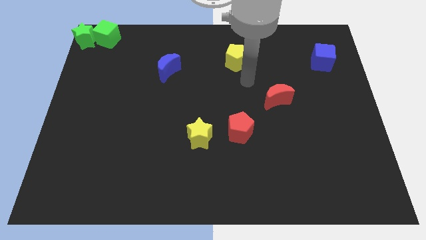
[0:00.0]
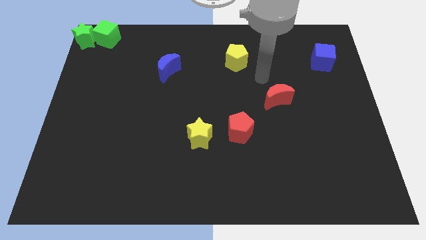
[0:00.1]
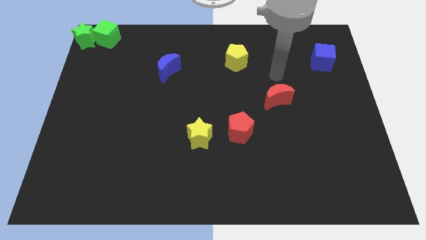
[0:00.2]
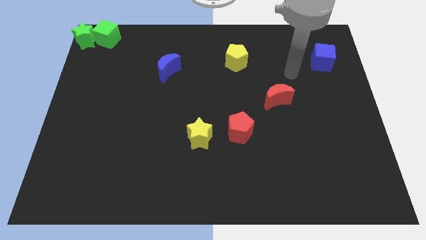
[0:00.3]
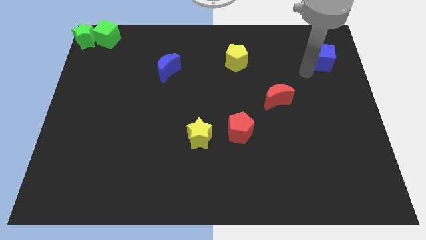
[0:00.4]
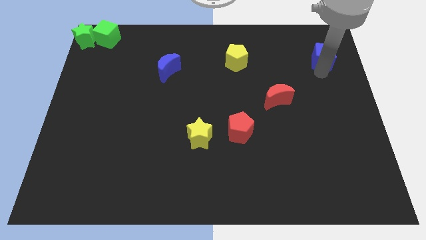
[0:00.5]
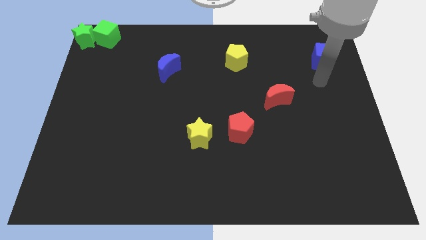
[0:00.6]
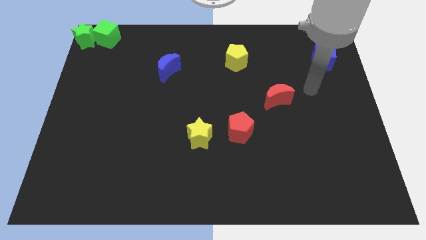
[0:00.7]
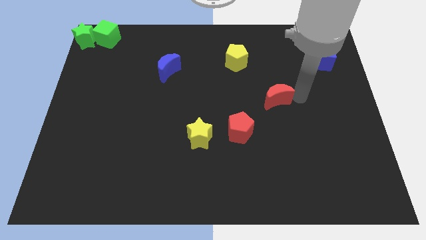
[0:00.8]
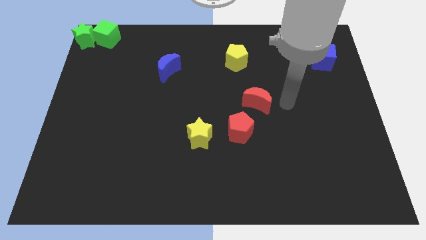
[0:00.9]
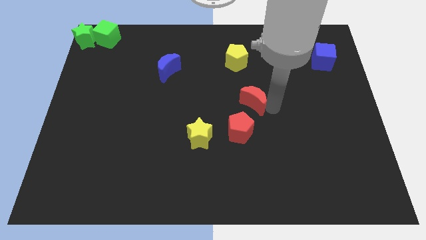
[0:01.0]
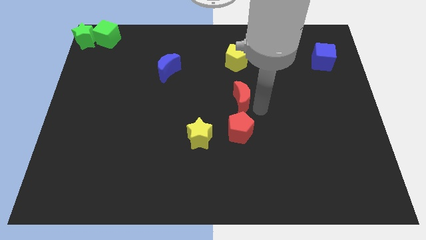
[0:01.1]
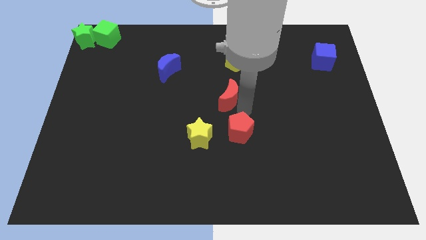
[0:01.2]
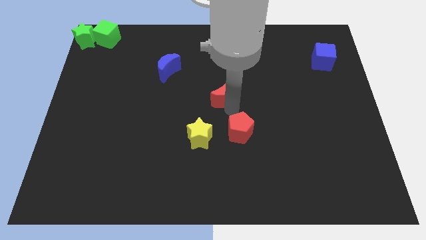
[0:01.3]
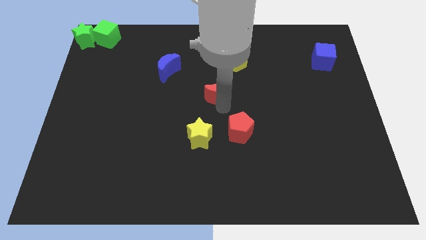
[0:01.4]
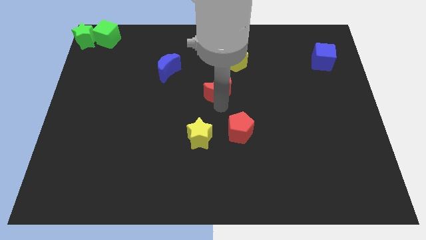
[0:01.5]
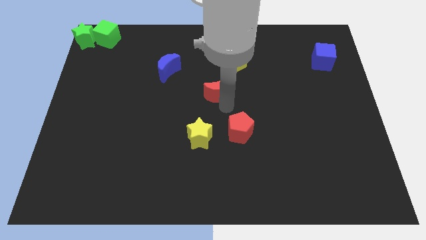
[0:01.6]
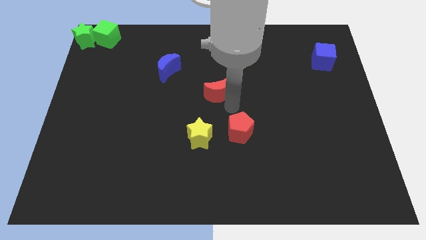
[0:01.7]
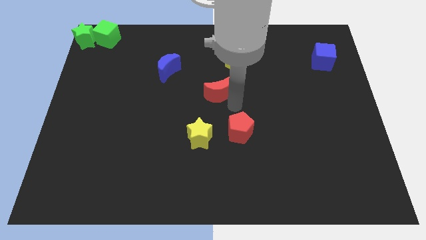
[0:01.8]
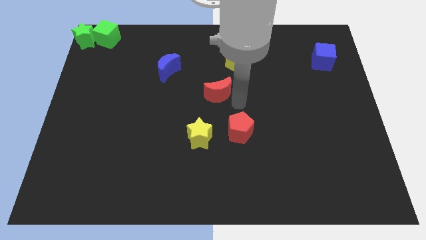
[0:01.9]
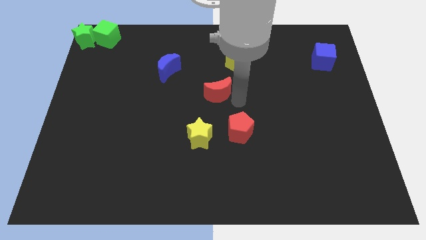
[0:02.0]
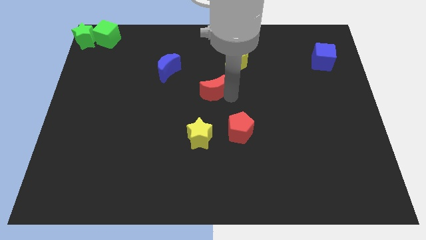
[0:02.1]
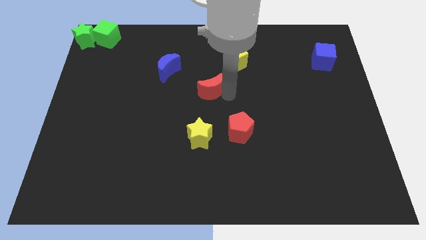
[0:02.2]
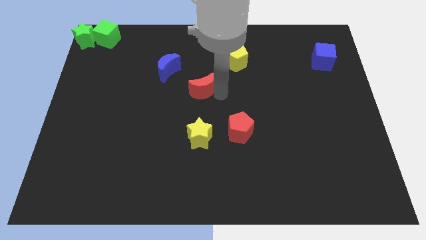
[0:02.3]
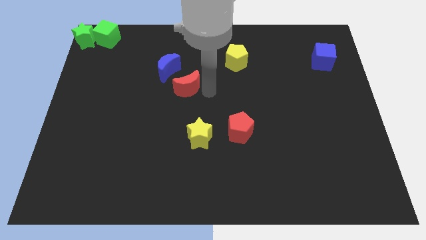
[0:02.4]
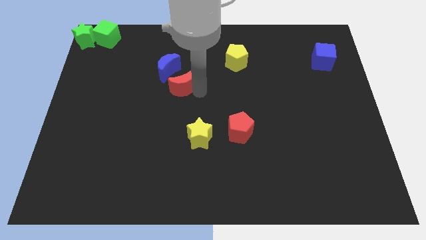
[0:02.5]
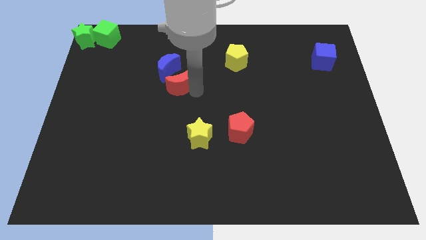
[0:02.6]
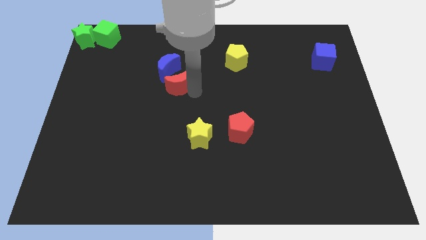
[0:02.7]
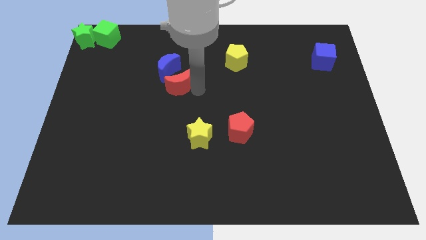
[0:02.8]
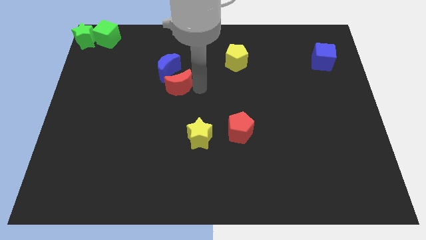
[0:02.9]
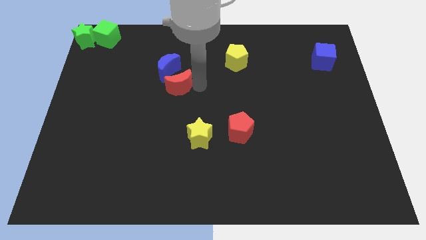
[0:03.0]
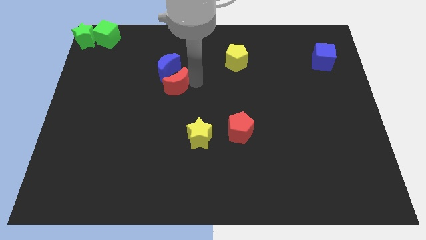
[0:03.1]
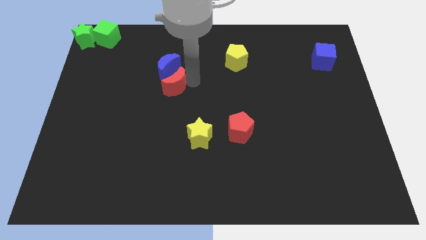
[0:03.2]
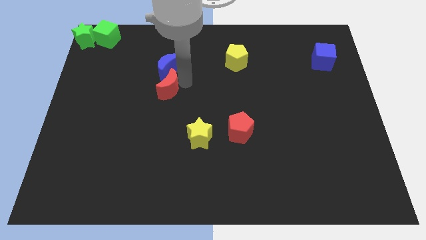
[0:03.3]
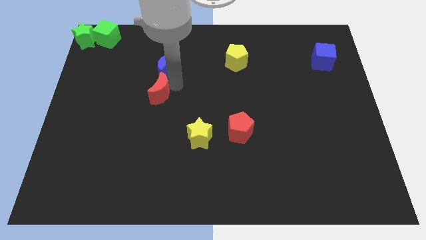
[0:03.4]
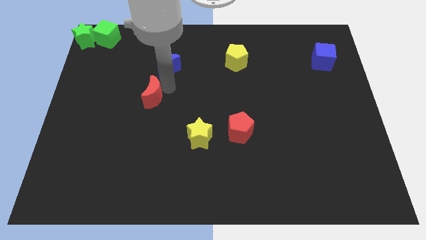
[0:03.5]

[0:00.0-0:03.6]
place red moon to the bottom of blue moon

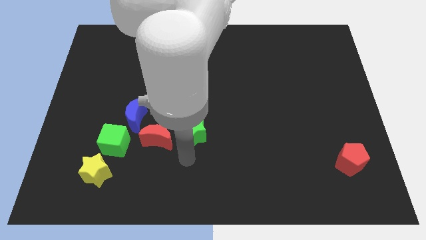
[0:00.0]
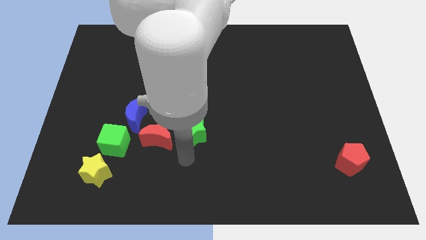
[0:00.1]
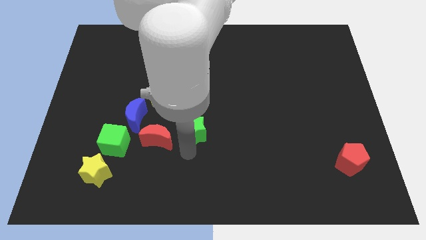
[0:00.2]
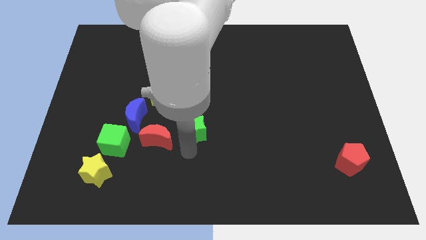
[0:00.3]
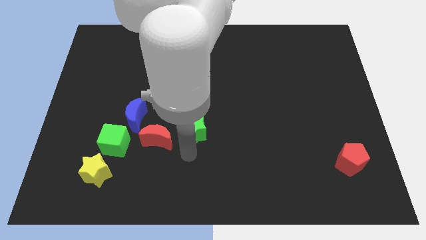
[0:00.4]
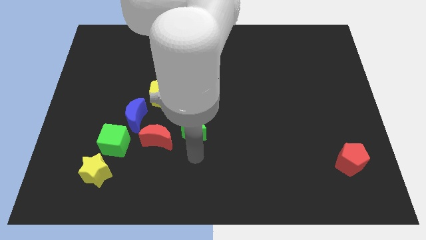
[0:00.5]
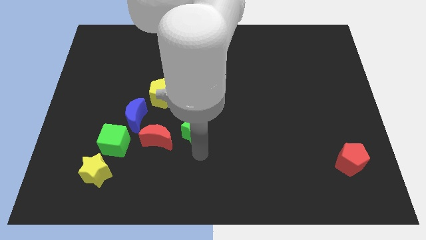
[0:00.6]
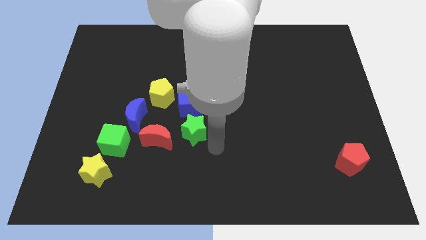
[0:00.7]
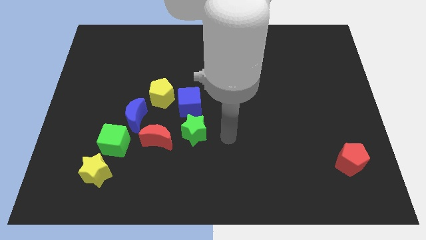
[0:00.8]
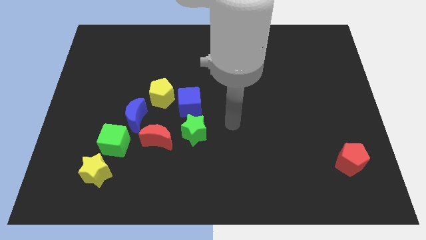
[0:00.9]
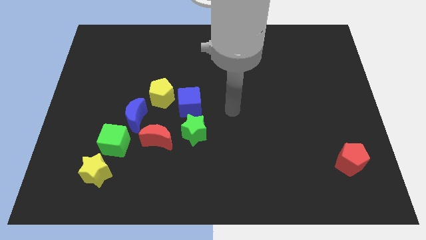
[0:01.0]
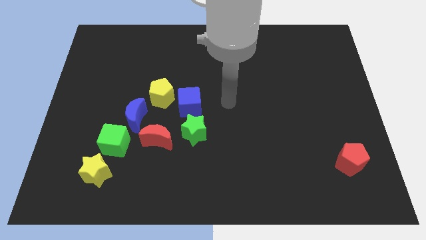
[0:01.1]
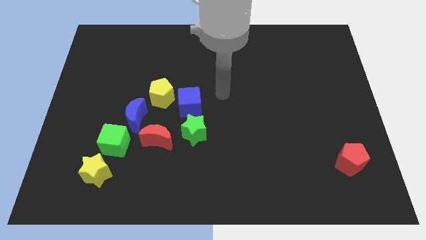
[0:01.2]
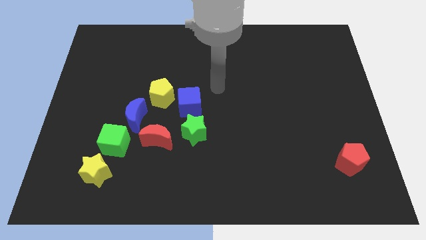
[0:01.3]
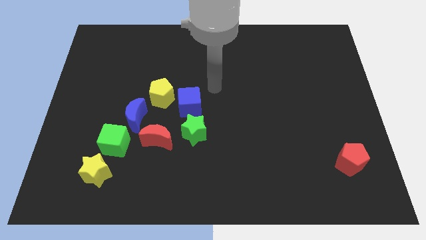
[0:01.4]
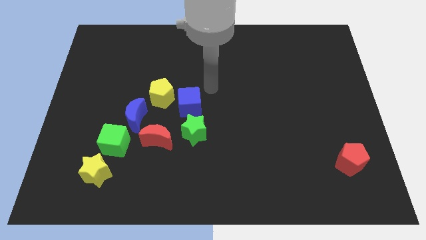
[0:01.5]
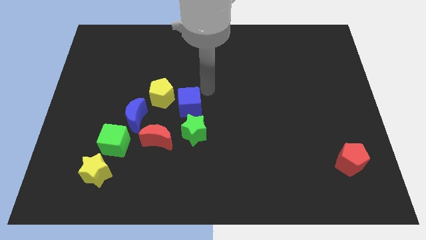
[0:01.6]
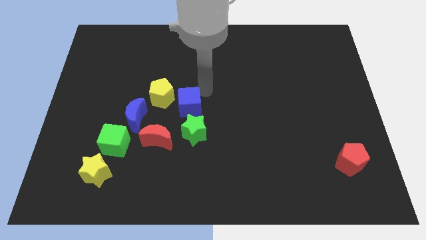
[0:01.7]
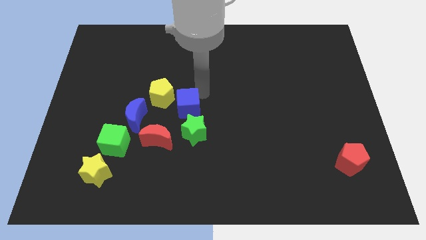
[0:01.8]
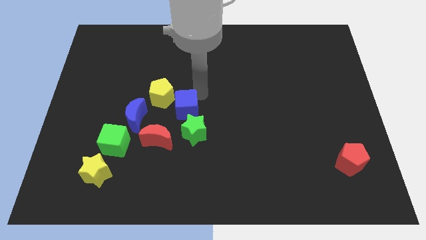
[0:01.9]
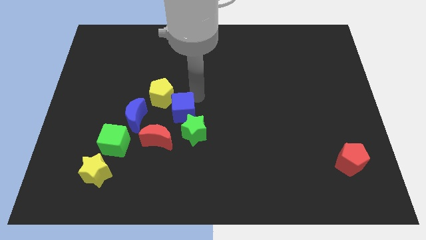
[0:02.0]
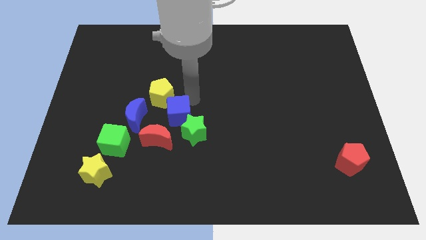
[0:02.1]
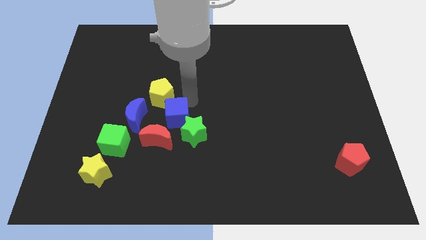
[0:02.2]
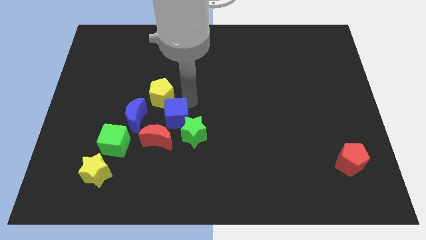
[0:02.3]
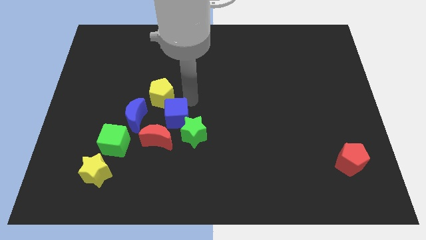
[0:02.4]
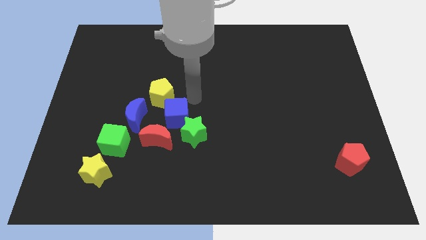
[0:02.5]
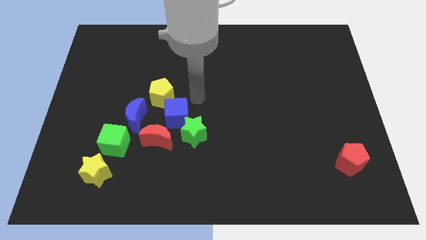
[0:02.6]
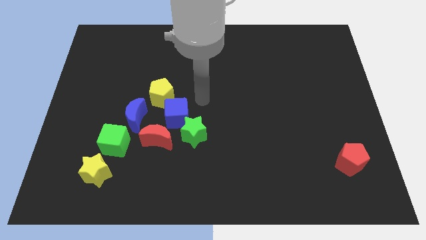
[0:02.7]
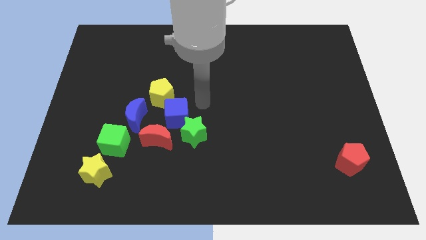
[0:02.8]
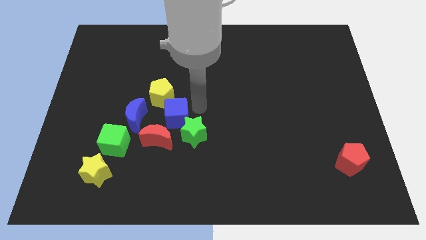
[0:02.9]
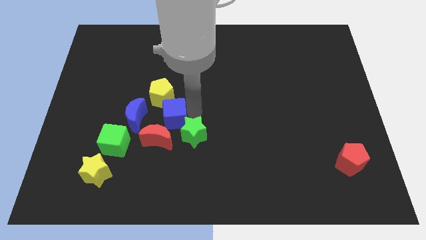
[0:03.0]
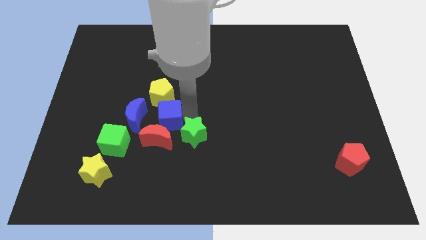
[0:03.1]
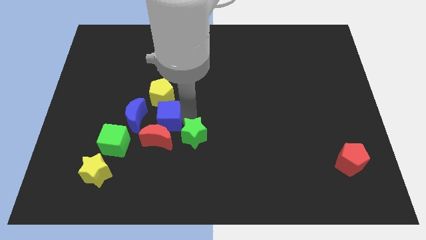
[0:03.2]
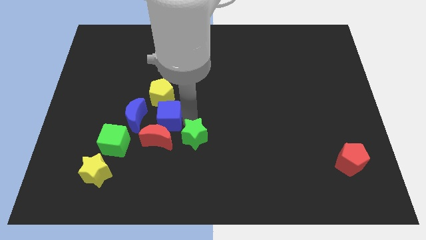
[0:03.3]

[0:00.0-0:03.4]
move the blue cube into the group of blocks

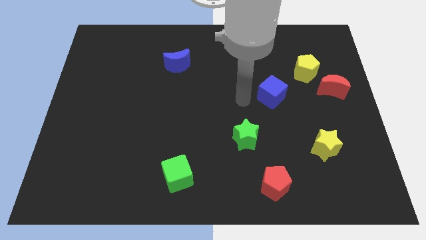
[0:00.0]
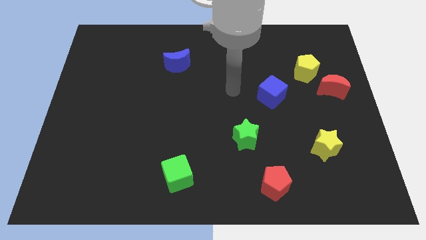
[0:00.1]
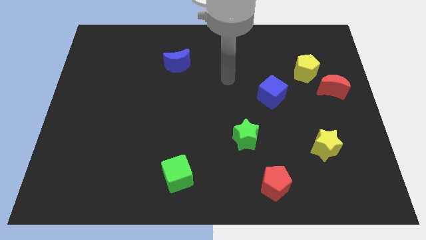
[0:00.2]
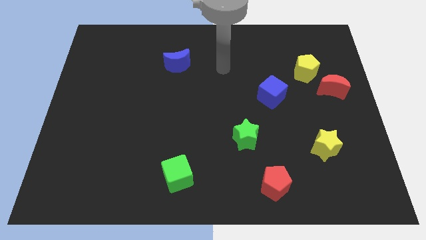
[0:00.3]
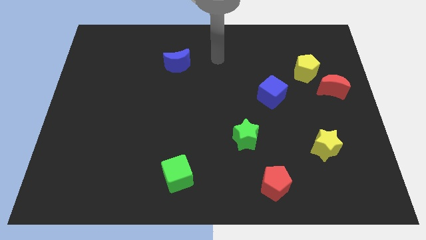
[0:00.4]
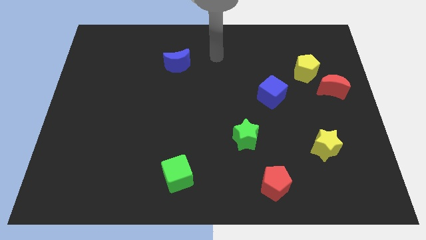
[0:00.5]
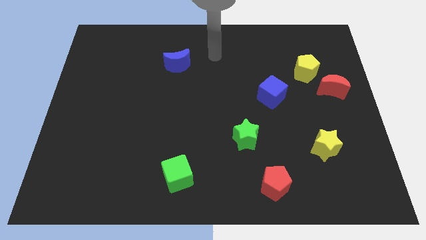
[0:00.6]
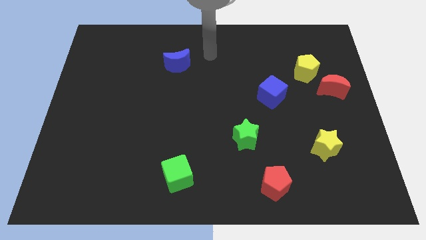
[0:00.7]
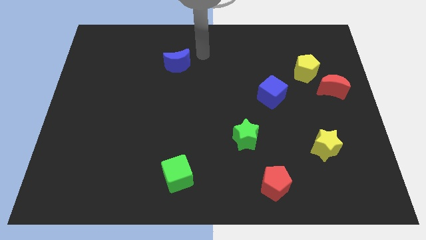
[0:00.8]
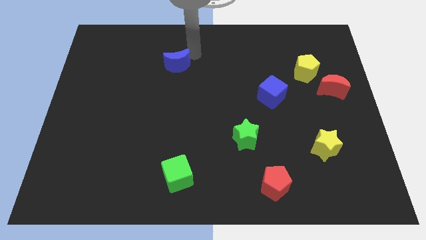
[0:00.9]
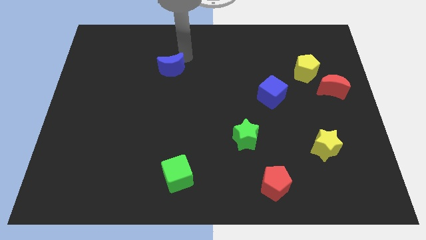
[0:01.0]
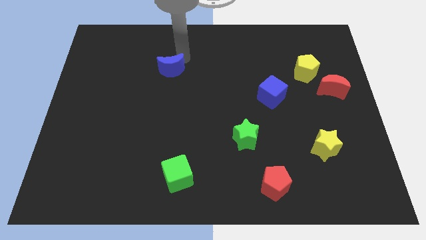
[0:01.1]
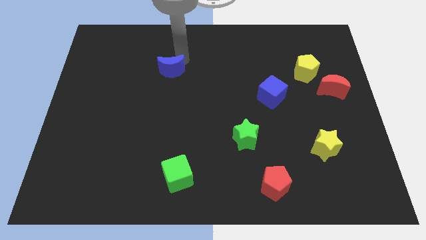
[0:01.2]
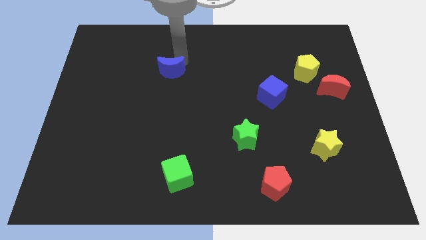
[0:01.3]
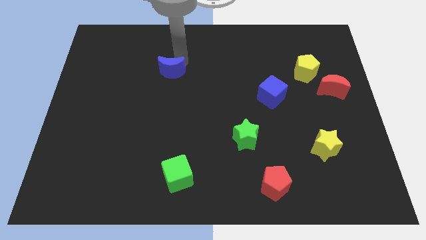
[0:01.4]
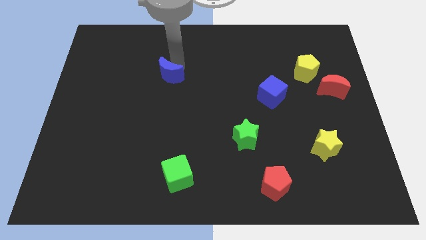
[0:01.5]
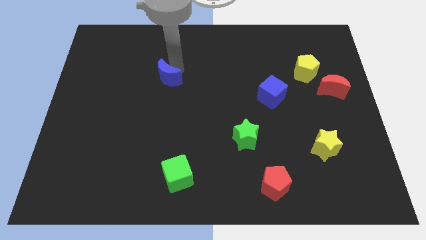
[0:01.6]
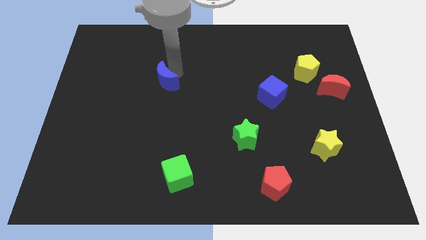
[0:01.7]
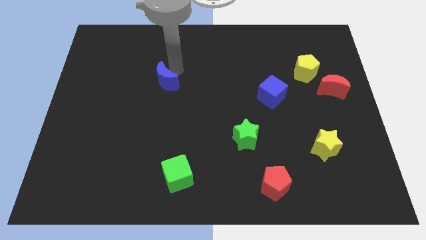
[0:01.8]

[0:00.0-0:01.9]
slightly move the blue crescent above the green cube

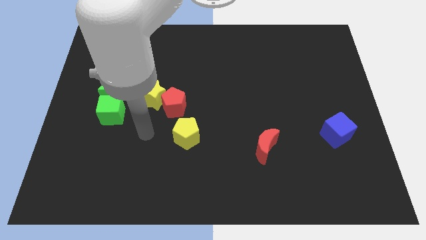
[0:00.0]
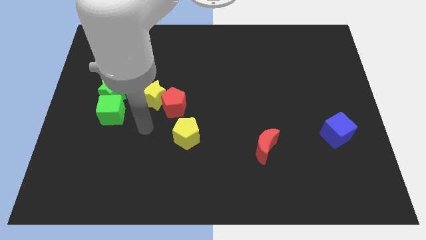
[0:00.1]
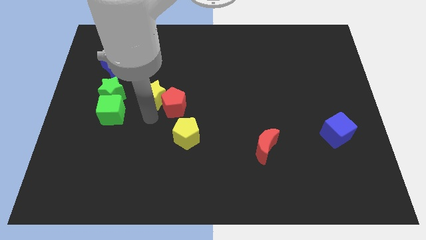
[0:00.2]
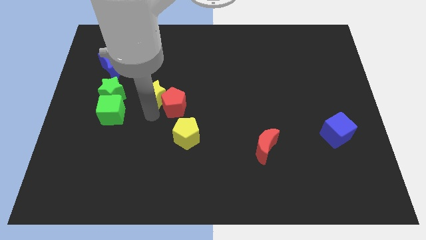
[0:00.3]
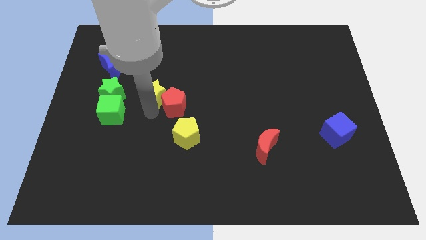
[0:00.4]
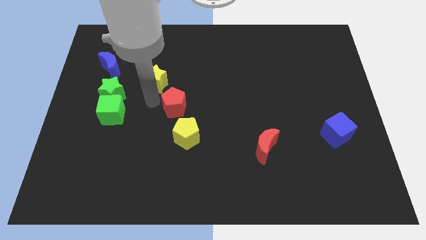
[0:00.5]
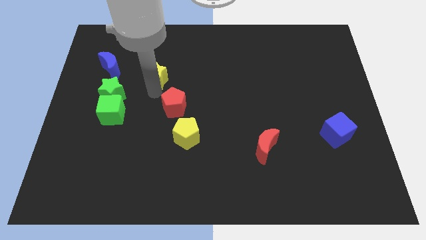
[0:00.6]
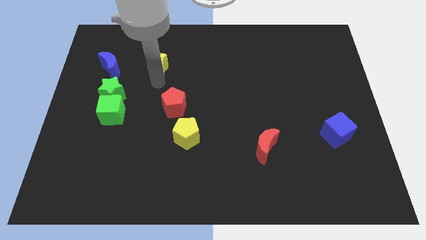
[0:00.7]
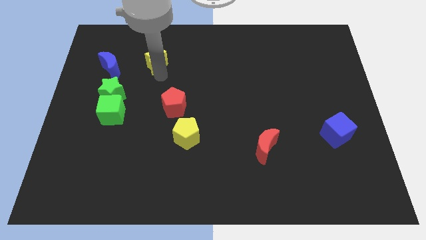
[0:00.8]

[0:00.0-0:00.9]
slightly move the yellow star up
